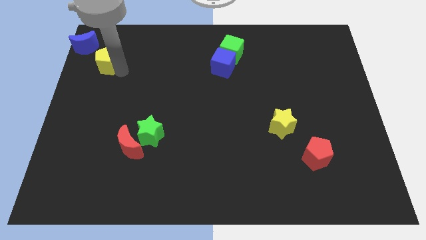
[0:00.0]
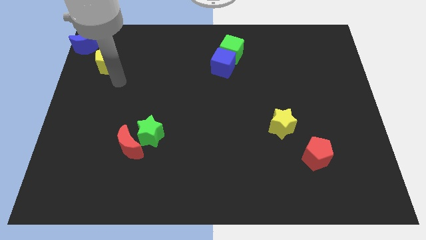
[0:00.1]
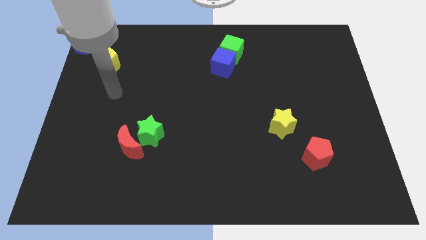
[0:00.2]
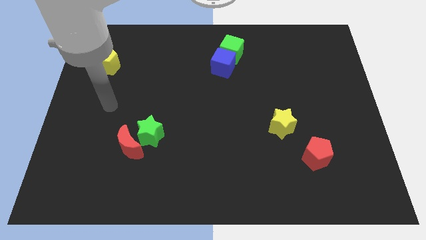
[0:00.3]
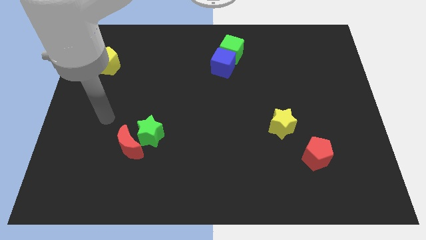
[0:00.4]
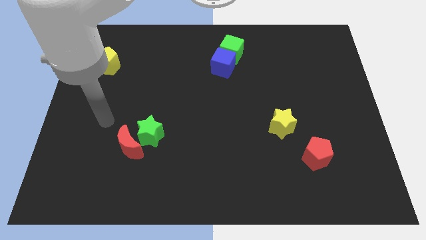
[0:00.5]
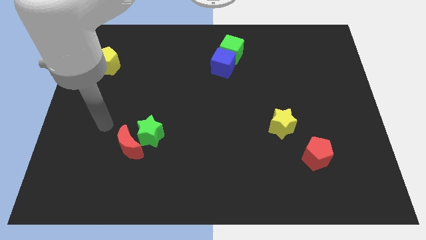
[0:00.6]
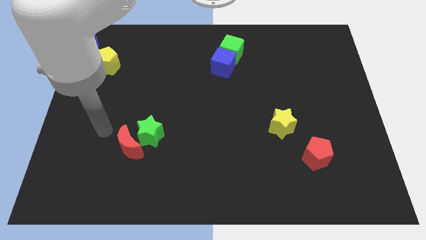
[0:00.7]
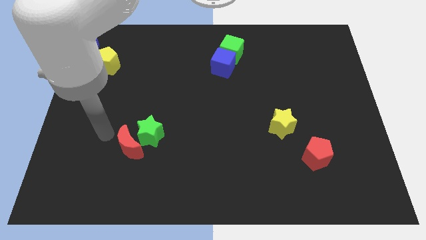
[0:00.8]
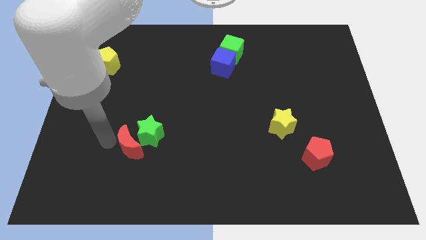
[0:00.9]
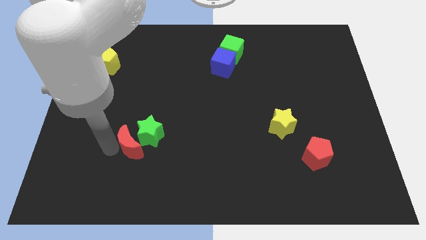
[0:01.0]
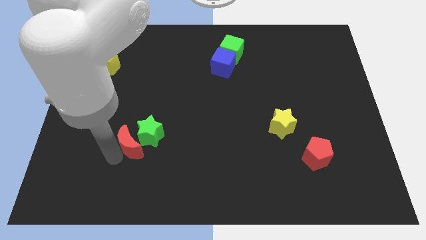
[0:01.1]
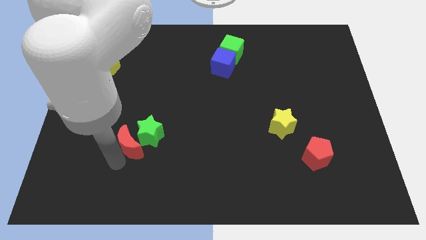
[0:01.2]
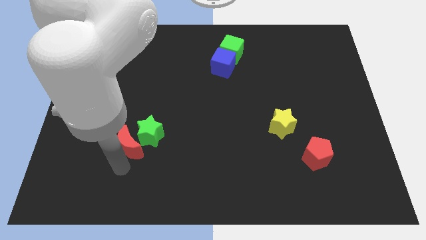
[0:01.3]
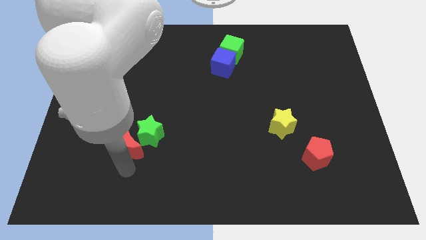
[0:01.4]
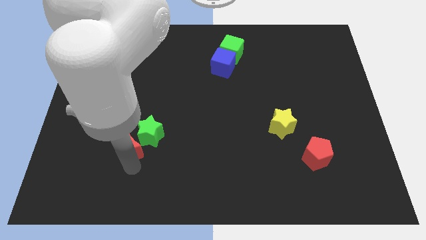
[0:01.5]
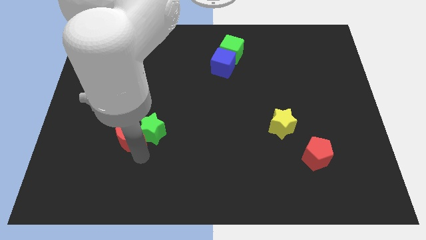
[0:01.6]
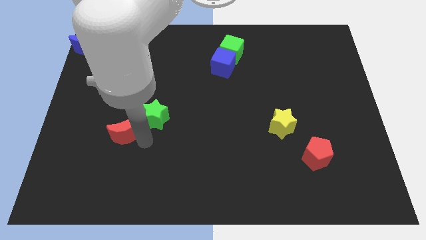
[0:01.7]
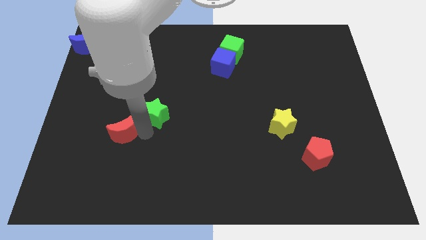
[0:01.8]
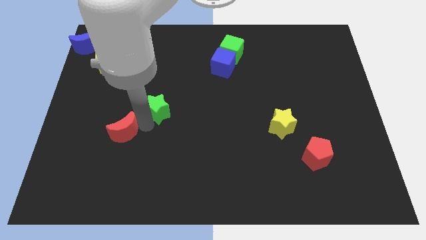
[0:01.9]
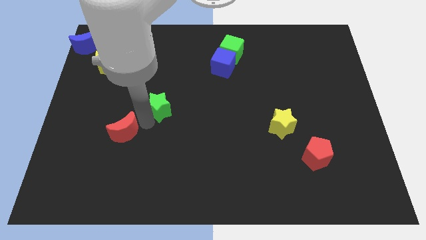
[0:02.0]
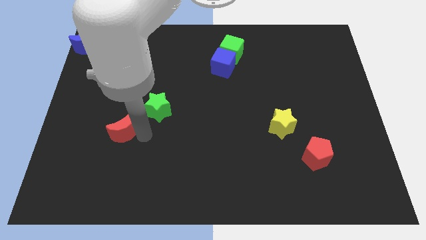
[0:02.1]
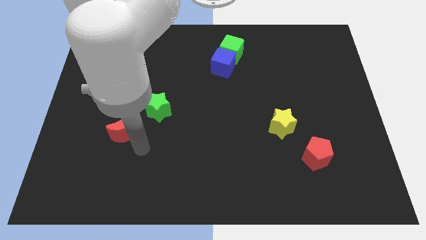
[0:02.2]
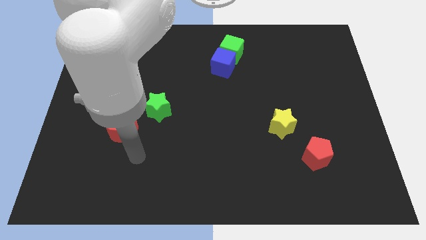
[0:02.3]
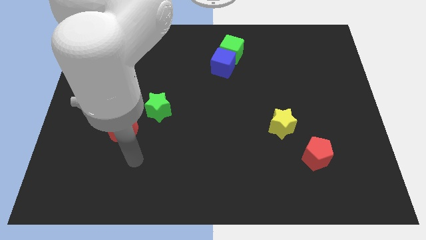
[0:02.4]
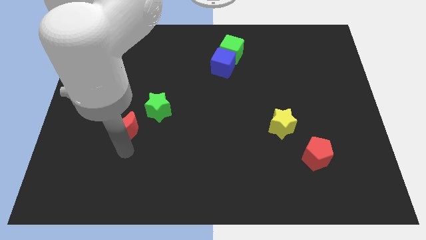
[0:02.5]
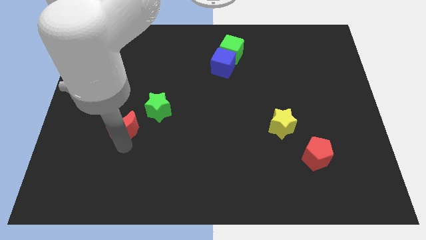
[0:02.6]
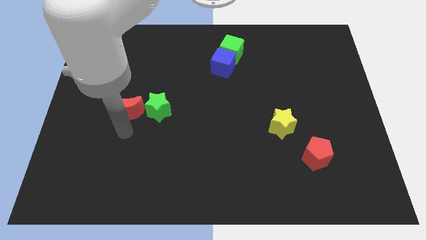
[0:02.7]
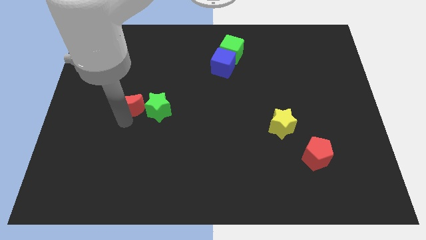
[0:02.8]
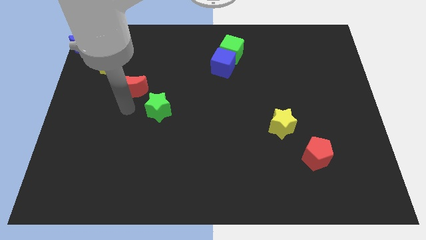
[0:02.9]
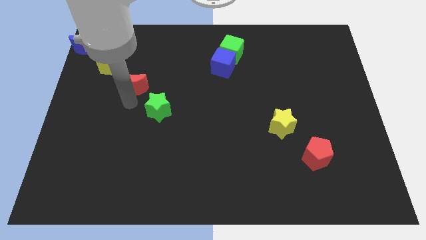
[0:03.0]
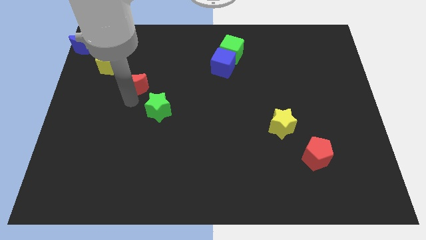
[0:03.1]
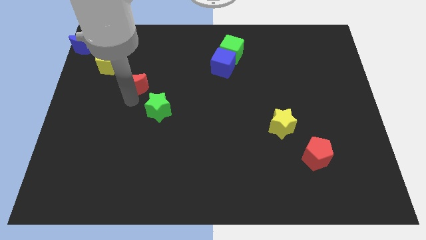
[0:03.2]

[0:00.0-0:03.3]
move the red crescent away from the green star

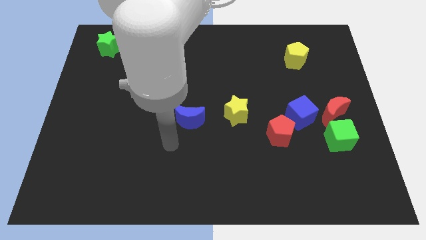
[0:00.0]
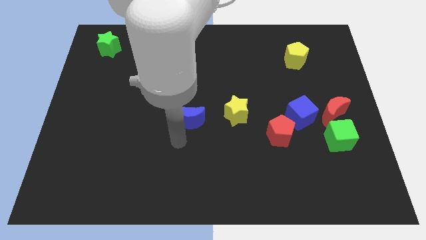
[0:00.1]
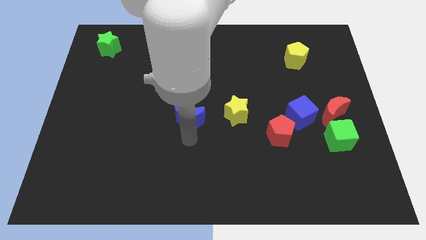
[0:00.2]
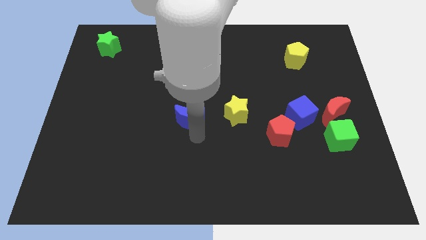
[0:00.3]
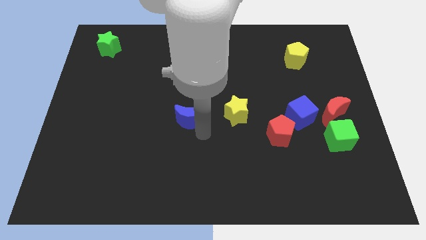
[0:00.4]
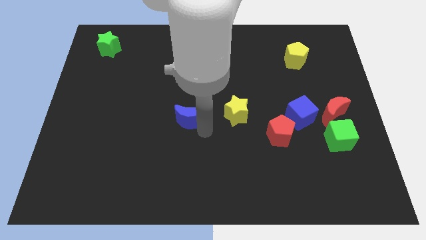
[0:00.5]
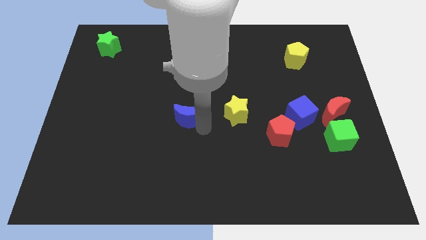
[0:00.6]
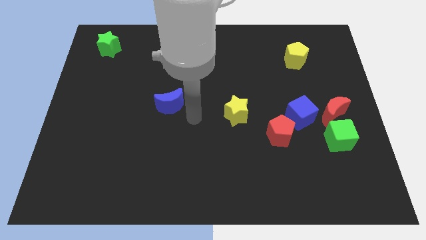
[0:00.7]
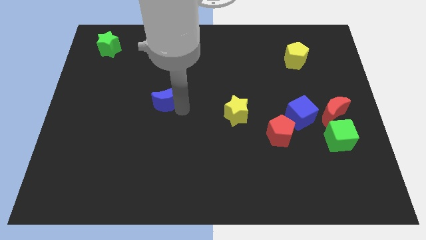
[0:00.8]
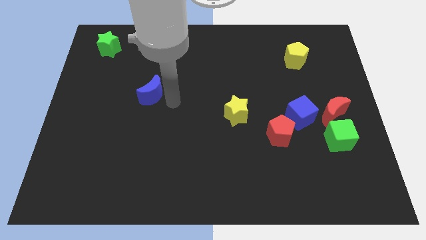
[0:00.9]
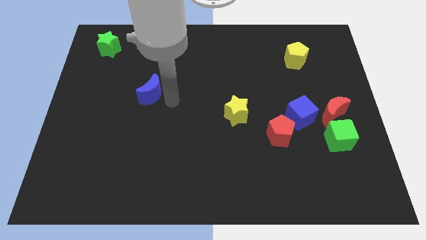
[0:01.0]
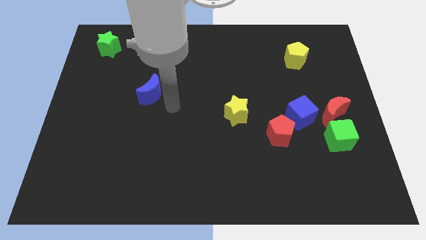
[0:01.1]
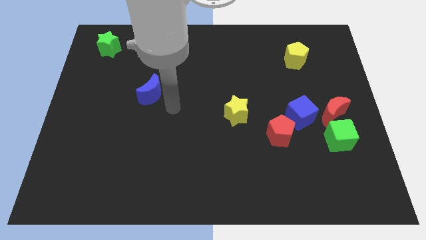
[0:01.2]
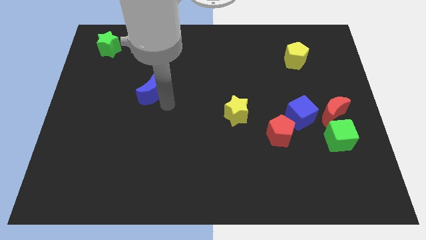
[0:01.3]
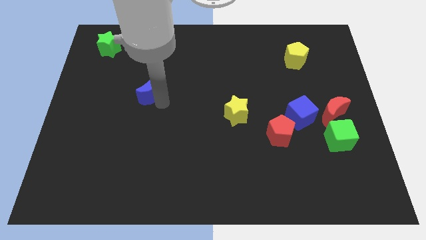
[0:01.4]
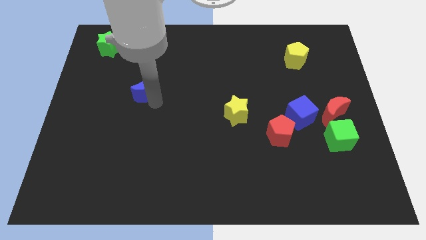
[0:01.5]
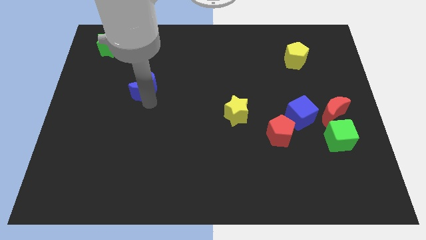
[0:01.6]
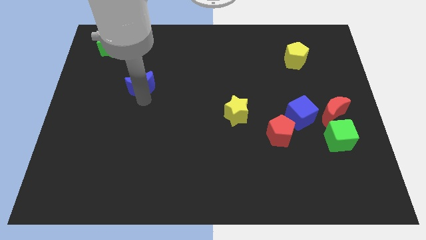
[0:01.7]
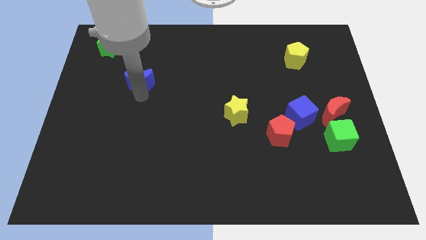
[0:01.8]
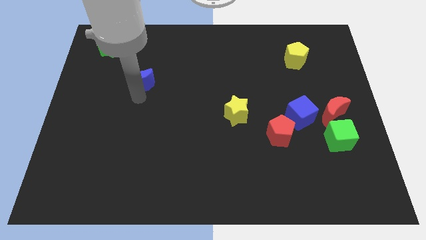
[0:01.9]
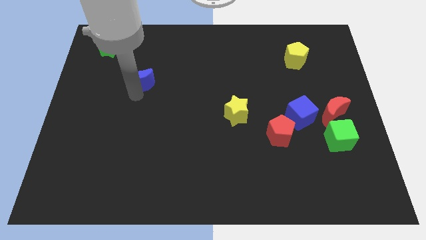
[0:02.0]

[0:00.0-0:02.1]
place the blue moon bottom right of green star

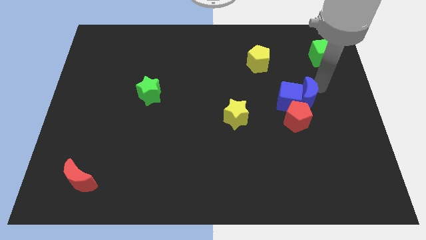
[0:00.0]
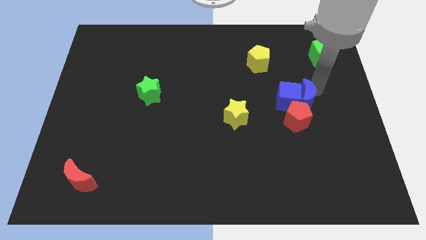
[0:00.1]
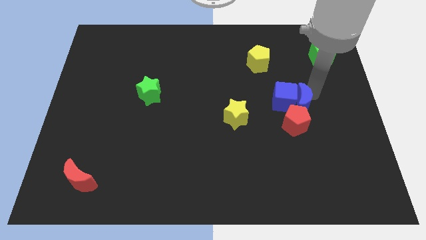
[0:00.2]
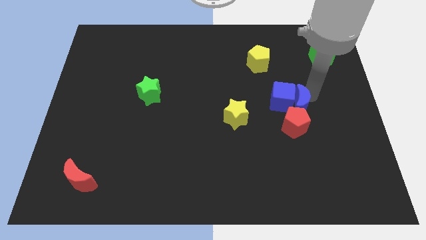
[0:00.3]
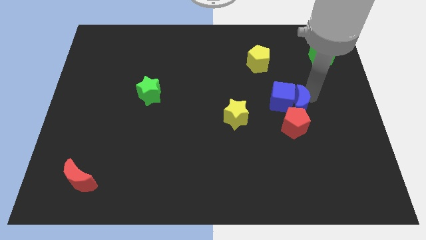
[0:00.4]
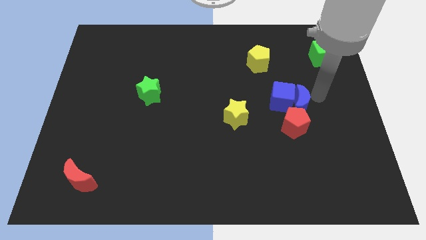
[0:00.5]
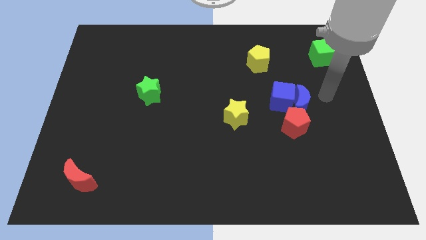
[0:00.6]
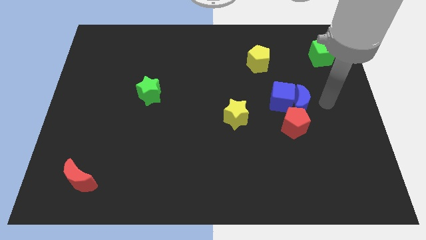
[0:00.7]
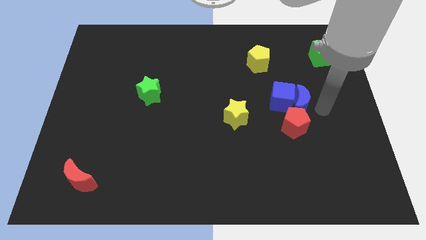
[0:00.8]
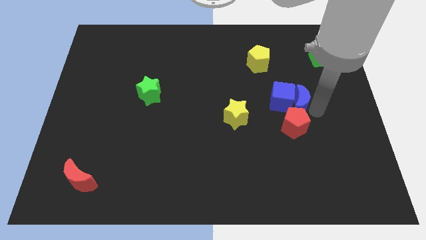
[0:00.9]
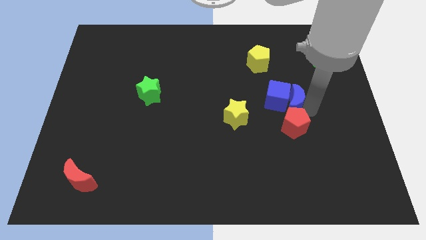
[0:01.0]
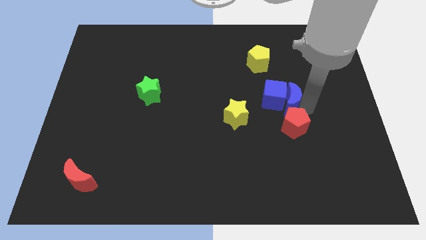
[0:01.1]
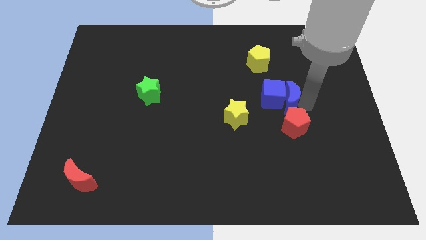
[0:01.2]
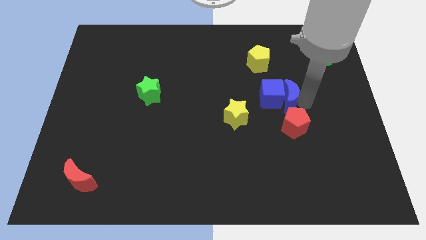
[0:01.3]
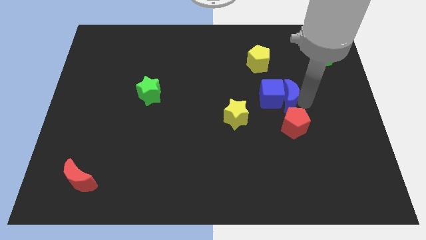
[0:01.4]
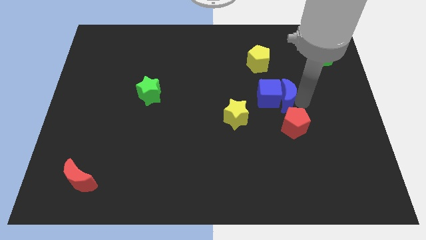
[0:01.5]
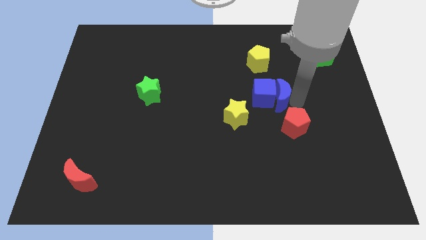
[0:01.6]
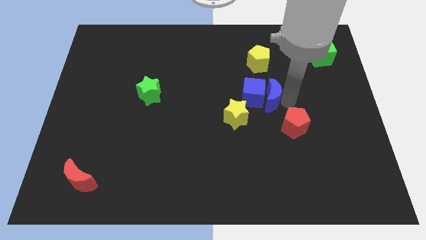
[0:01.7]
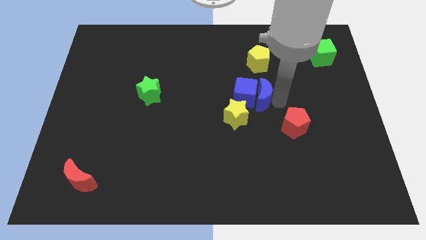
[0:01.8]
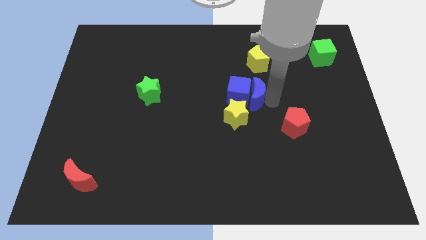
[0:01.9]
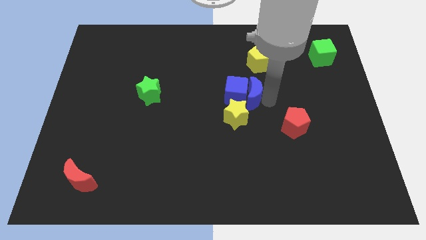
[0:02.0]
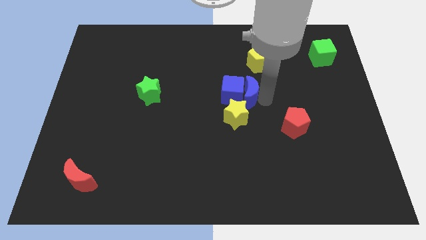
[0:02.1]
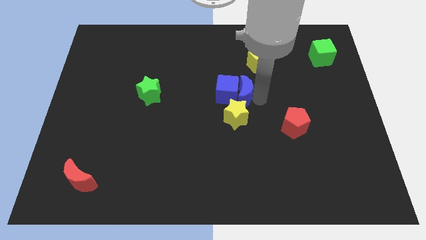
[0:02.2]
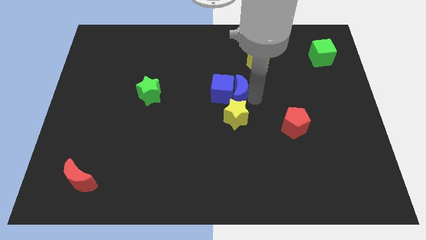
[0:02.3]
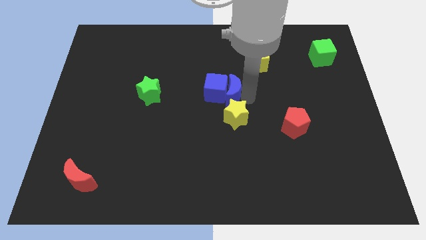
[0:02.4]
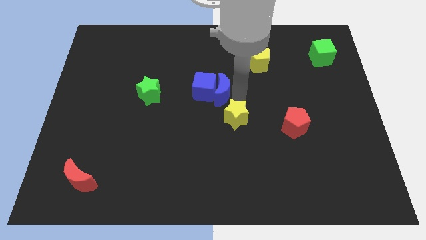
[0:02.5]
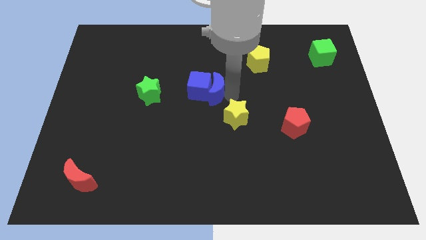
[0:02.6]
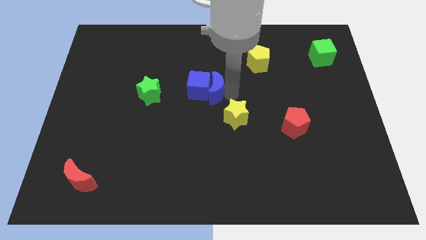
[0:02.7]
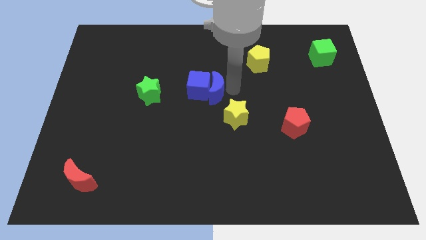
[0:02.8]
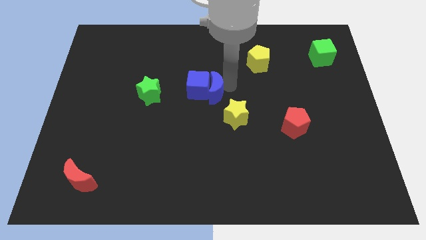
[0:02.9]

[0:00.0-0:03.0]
slide the blue blocks to the right of green star

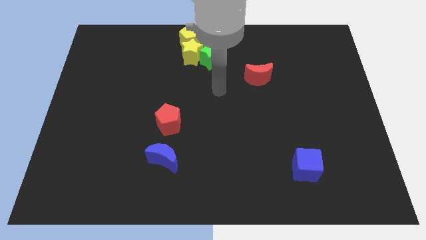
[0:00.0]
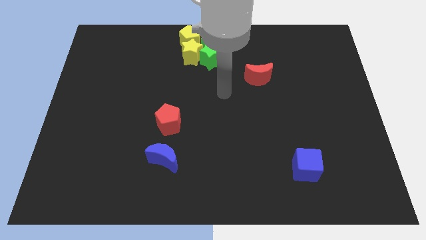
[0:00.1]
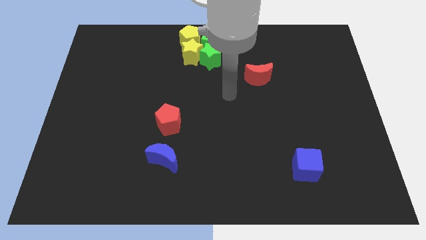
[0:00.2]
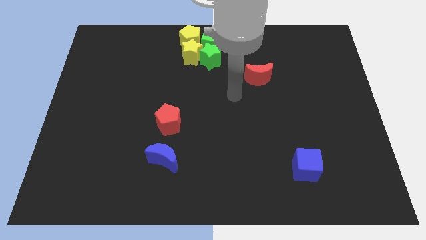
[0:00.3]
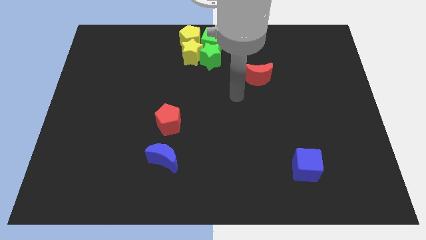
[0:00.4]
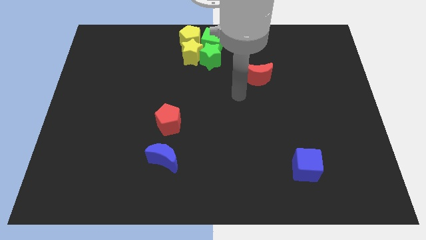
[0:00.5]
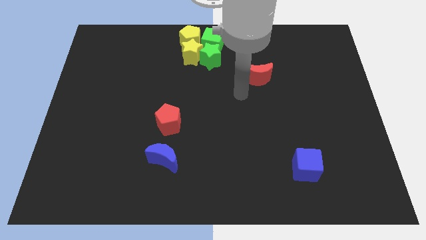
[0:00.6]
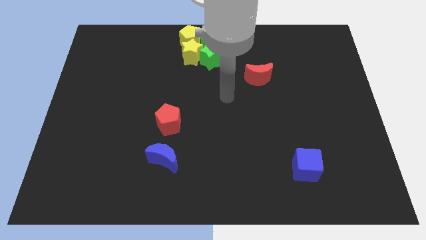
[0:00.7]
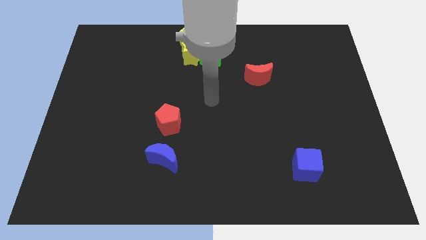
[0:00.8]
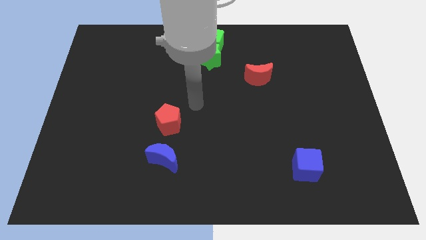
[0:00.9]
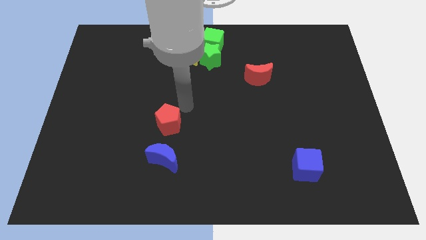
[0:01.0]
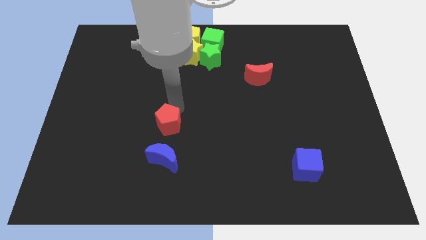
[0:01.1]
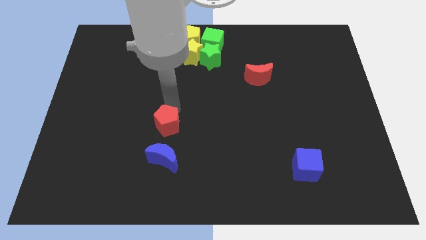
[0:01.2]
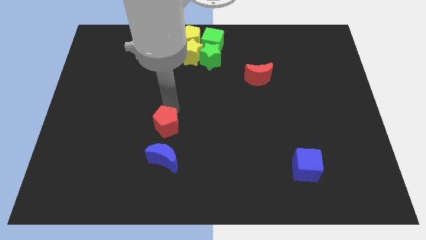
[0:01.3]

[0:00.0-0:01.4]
slightly move the red pentagon to the bottom
